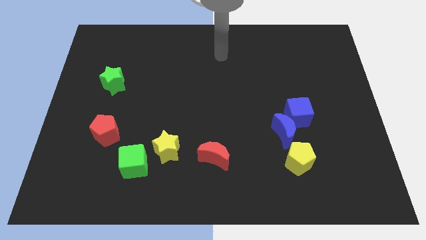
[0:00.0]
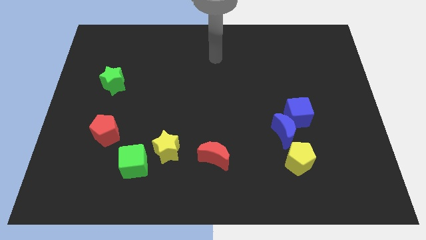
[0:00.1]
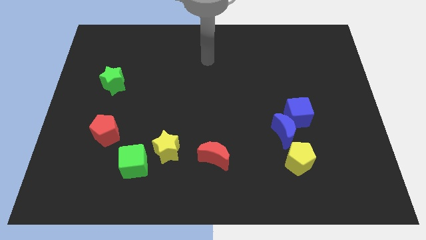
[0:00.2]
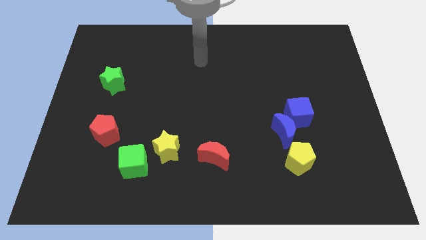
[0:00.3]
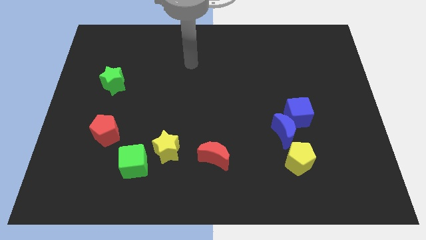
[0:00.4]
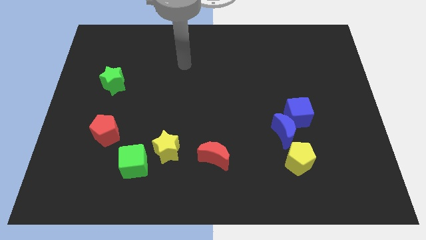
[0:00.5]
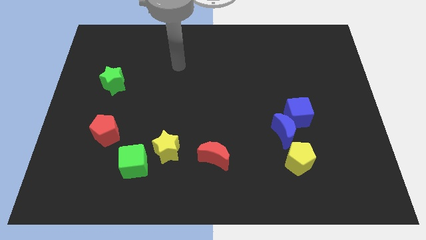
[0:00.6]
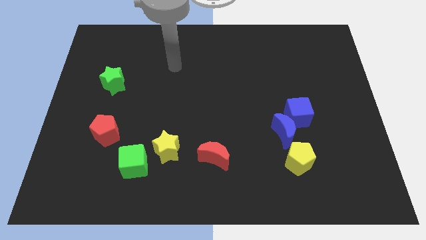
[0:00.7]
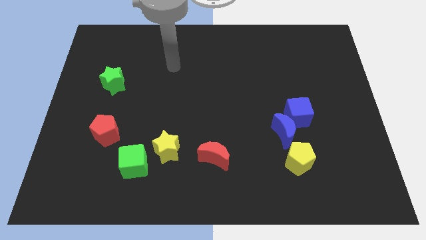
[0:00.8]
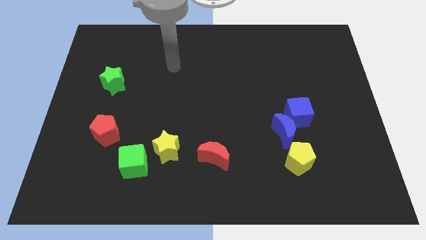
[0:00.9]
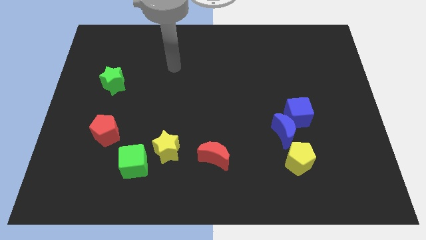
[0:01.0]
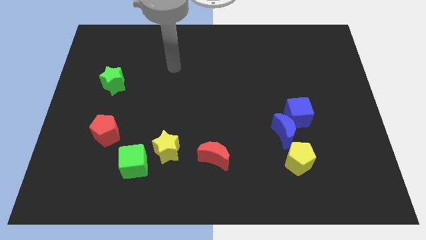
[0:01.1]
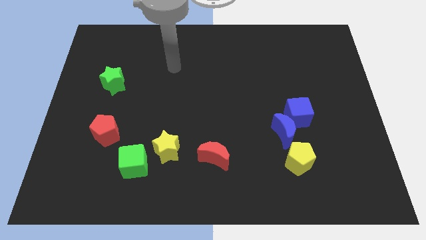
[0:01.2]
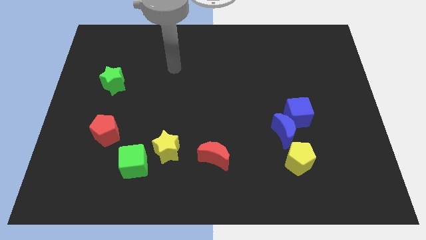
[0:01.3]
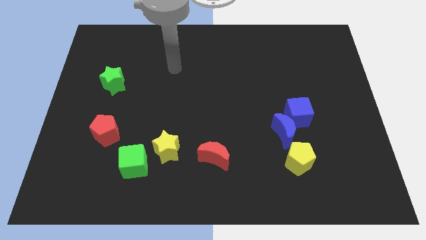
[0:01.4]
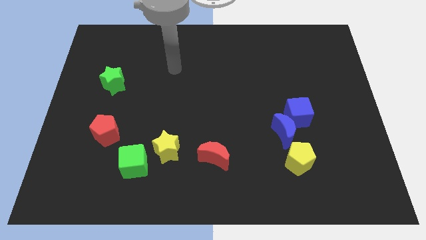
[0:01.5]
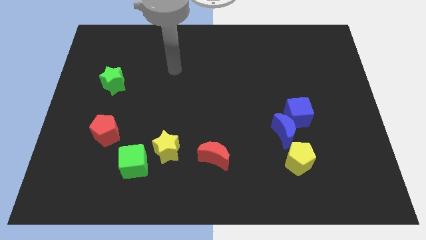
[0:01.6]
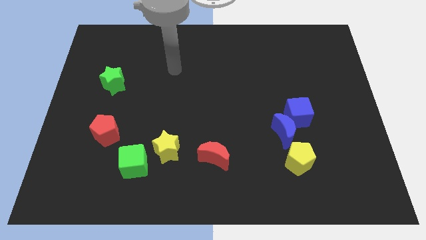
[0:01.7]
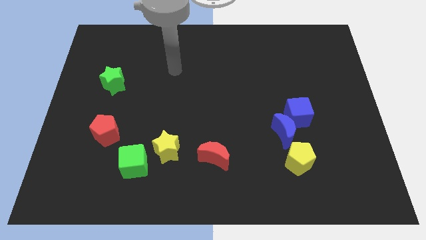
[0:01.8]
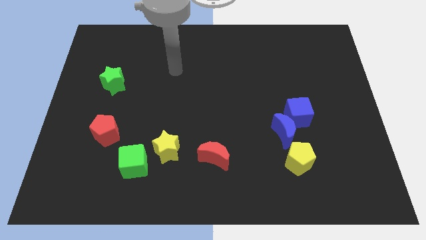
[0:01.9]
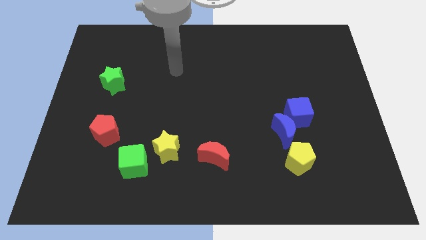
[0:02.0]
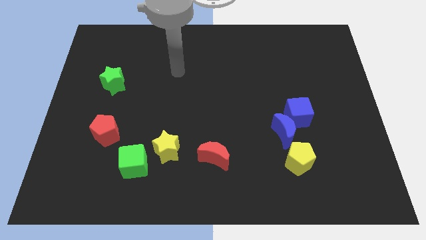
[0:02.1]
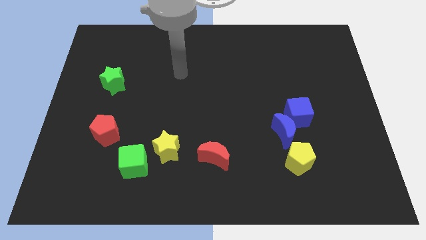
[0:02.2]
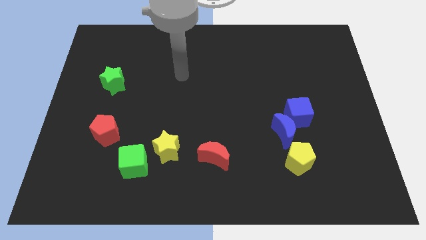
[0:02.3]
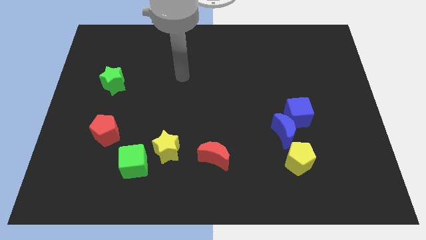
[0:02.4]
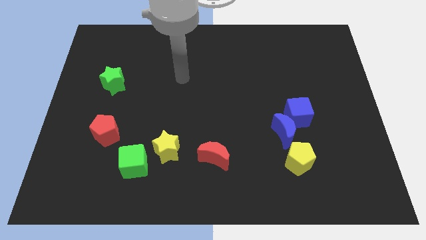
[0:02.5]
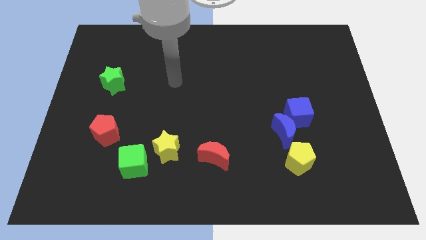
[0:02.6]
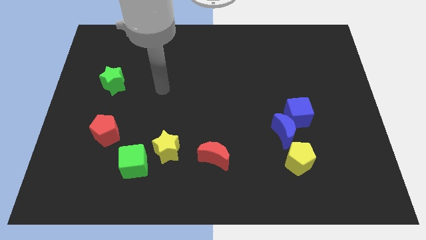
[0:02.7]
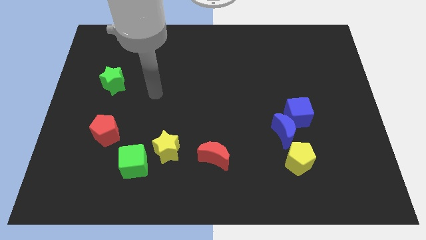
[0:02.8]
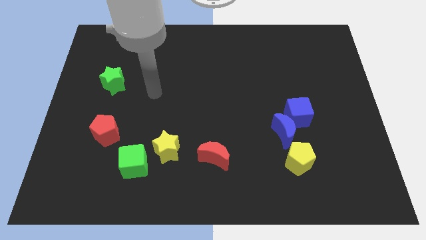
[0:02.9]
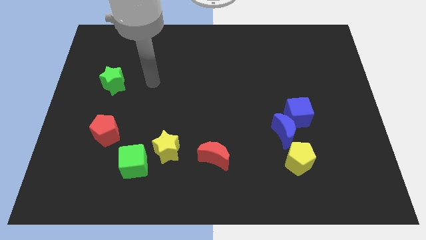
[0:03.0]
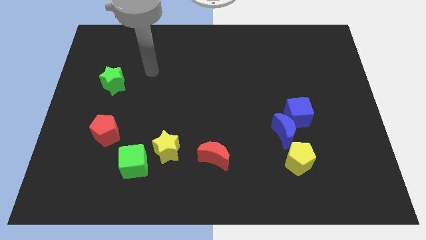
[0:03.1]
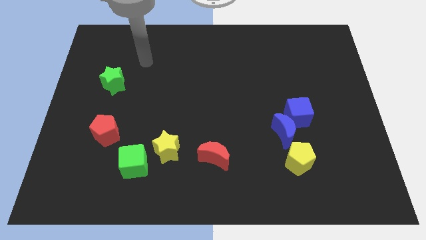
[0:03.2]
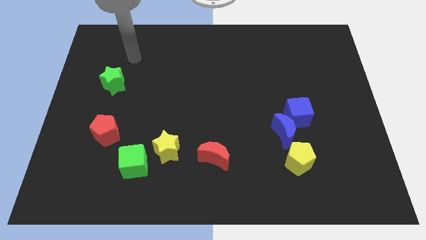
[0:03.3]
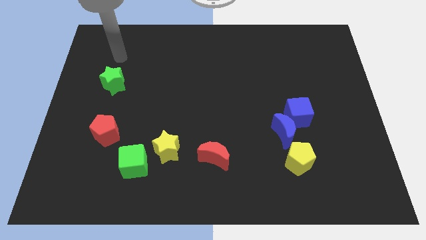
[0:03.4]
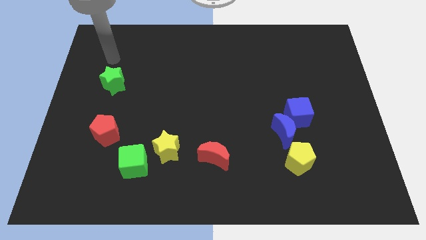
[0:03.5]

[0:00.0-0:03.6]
move the arm towards the top left of the board

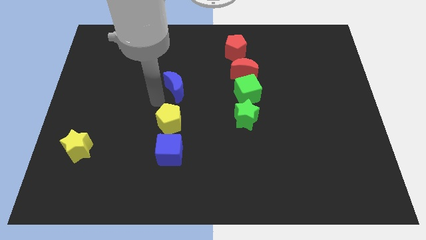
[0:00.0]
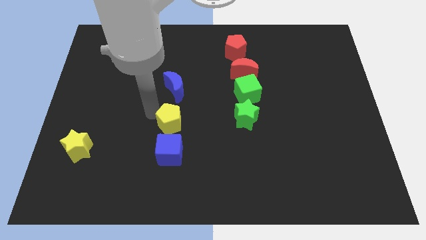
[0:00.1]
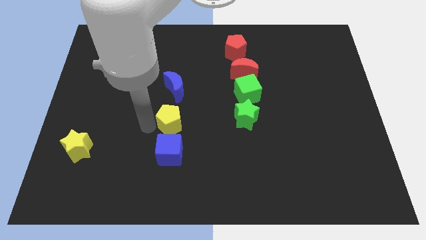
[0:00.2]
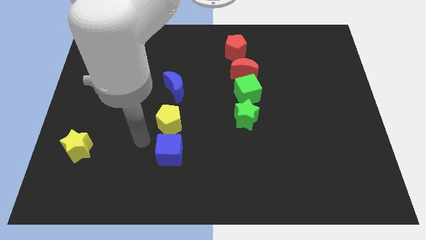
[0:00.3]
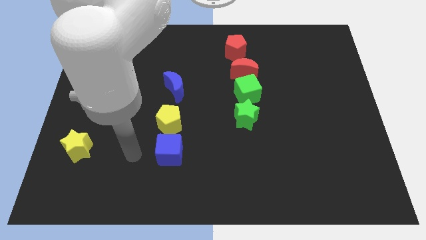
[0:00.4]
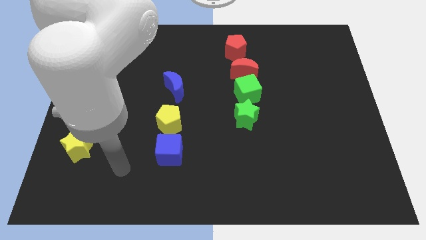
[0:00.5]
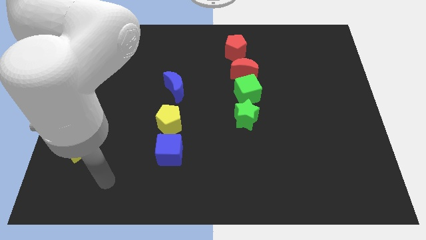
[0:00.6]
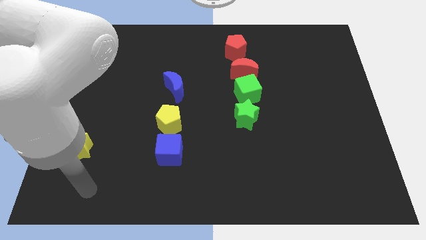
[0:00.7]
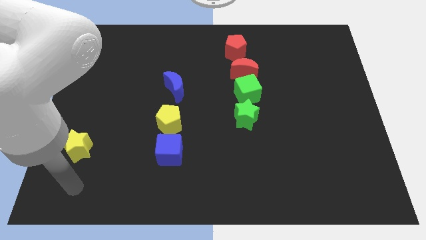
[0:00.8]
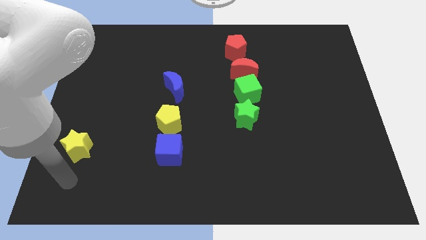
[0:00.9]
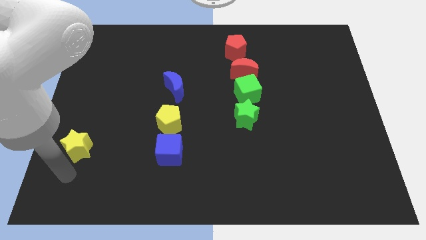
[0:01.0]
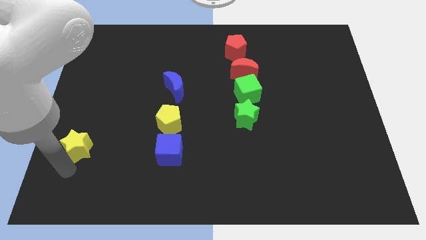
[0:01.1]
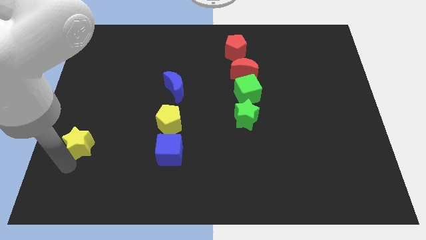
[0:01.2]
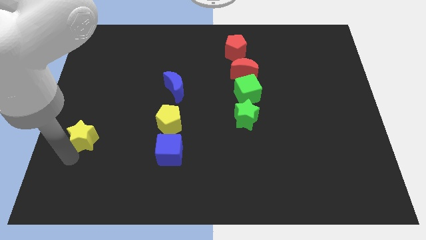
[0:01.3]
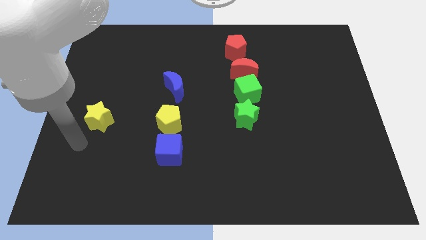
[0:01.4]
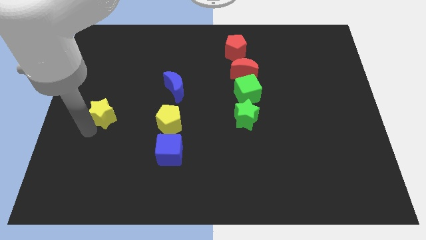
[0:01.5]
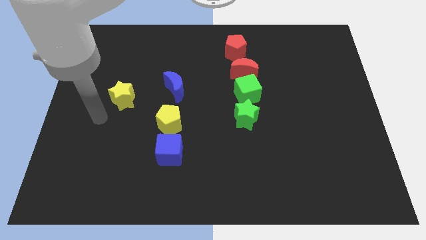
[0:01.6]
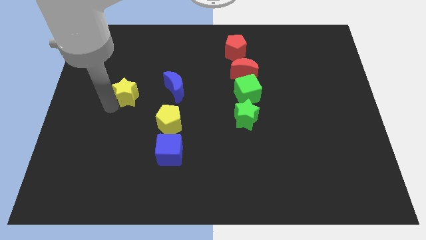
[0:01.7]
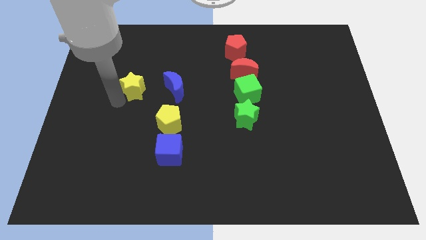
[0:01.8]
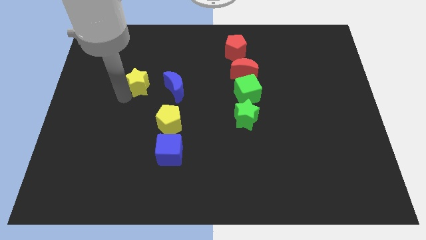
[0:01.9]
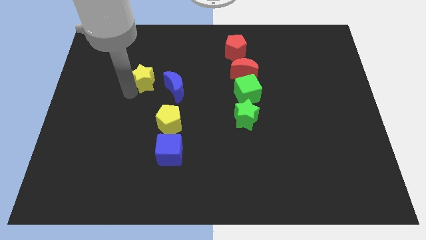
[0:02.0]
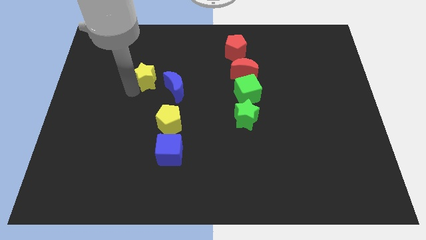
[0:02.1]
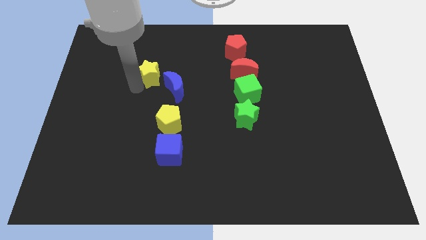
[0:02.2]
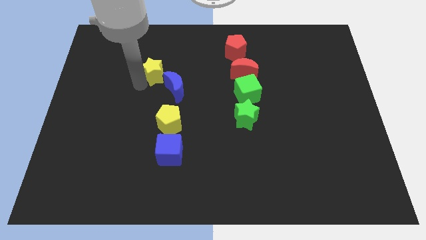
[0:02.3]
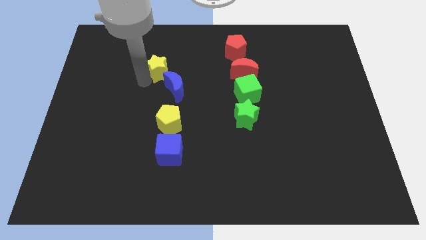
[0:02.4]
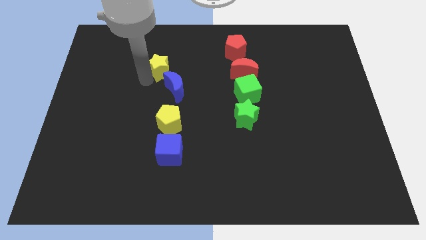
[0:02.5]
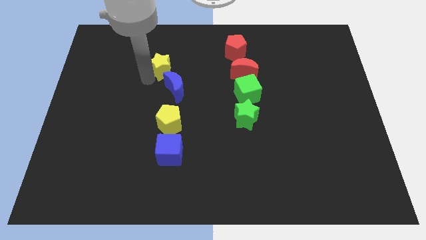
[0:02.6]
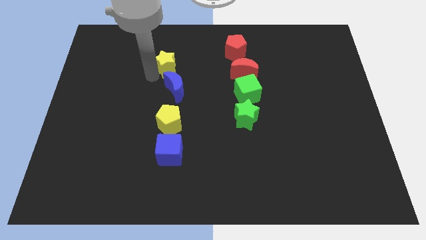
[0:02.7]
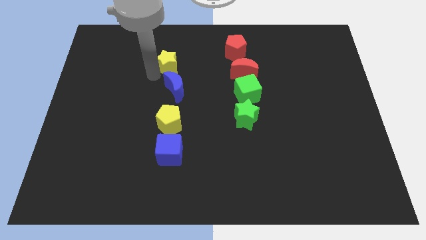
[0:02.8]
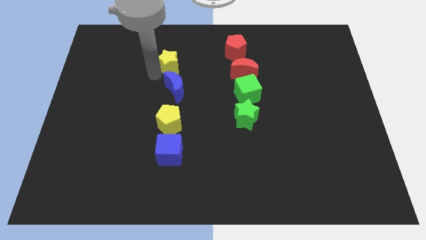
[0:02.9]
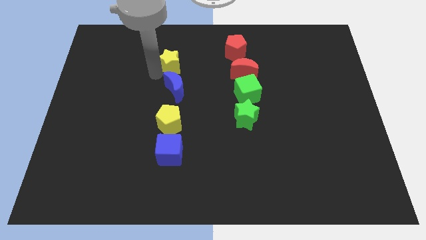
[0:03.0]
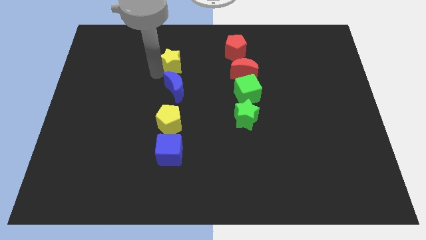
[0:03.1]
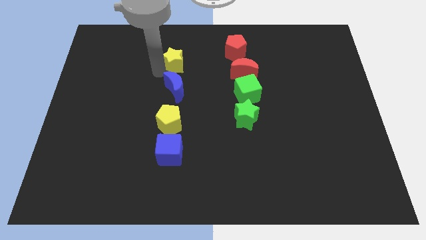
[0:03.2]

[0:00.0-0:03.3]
place the yellow star above the blue moon

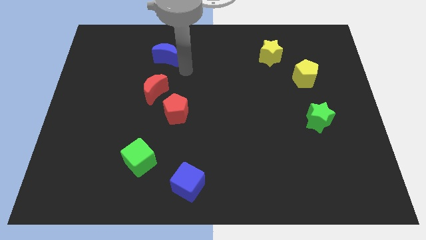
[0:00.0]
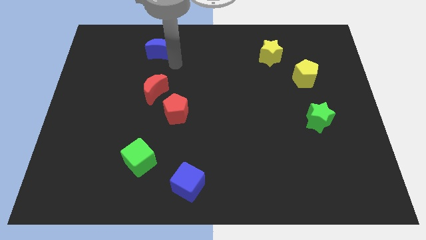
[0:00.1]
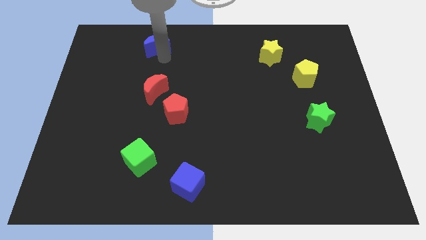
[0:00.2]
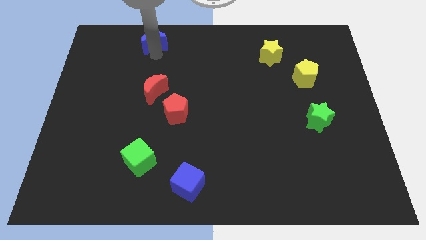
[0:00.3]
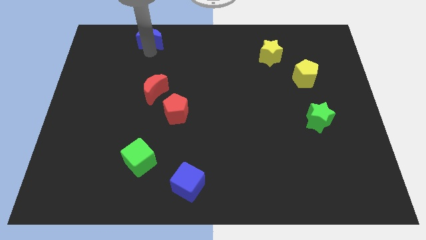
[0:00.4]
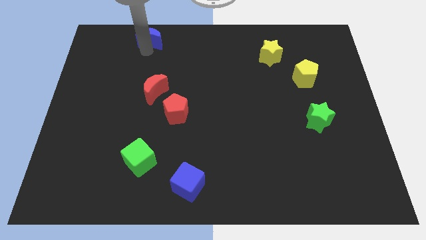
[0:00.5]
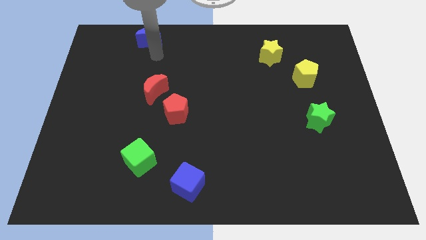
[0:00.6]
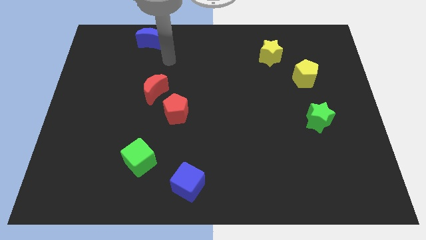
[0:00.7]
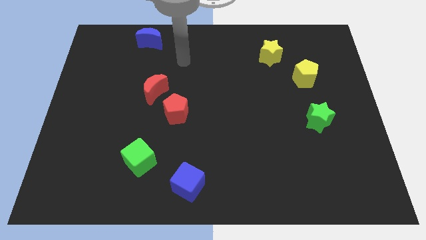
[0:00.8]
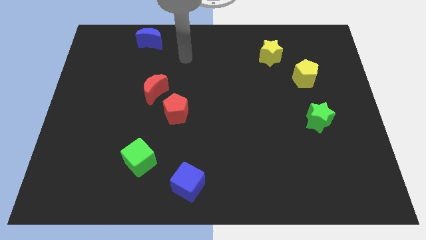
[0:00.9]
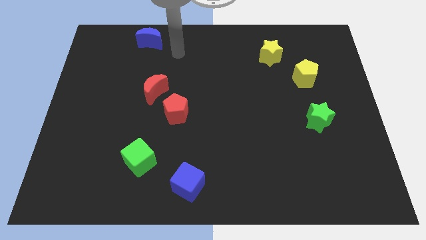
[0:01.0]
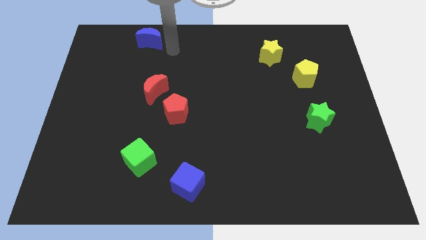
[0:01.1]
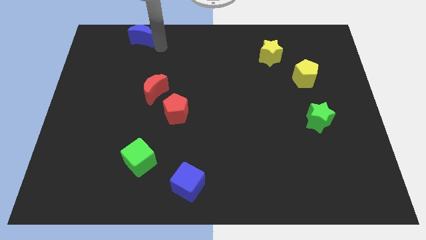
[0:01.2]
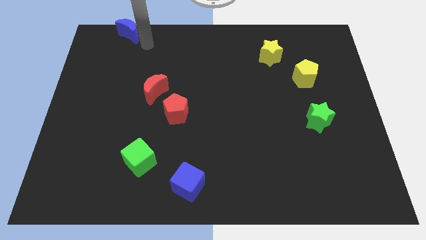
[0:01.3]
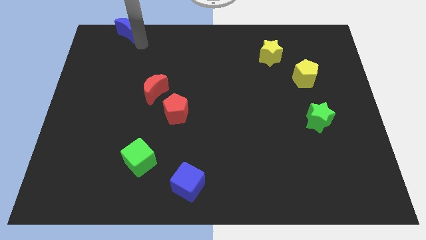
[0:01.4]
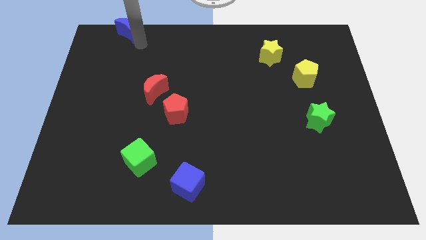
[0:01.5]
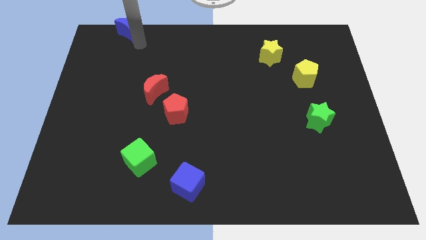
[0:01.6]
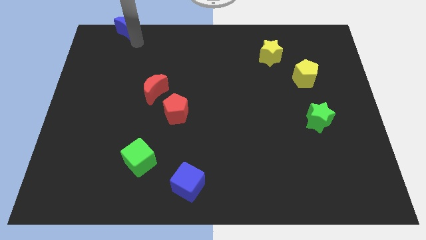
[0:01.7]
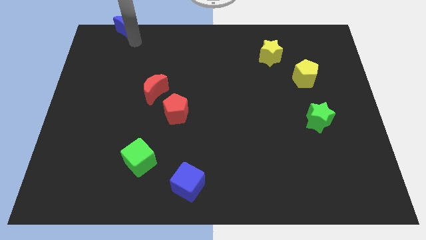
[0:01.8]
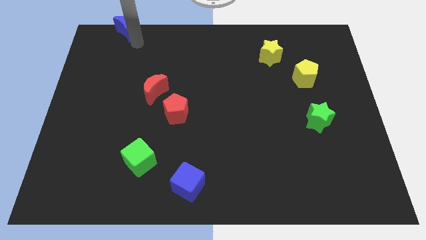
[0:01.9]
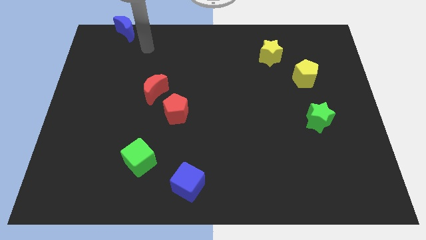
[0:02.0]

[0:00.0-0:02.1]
move the blue crescent towards the top left
